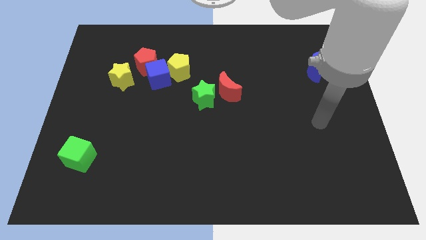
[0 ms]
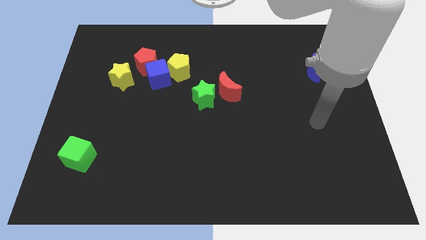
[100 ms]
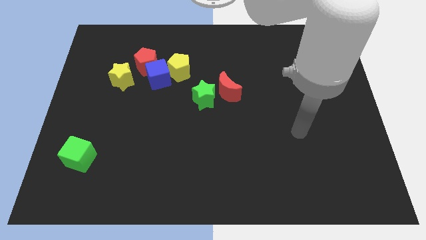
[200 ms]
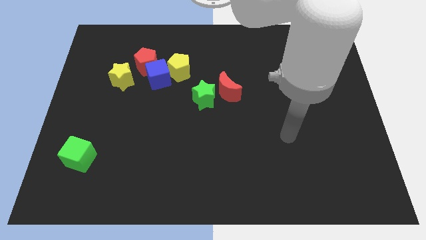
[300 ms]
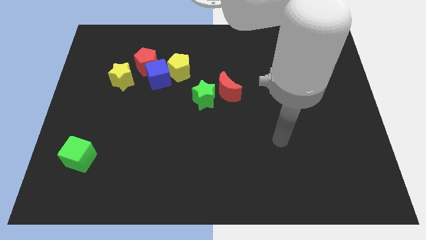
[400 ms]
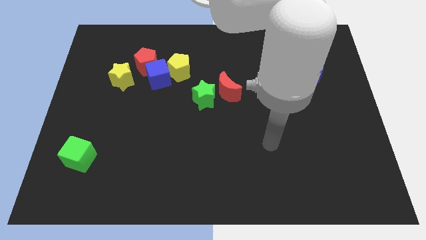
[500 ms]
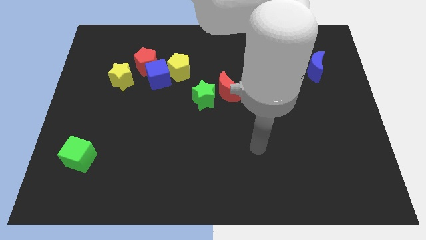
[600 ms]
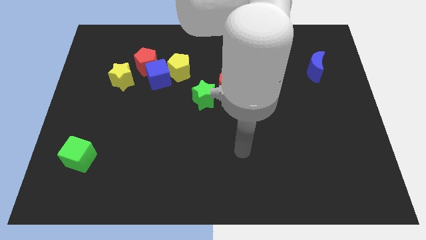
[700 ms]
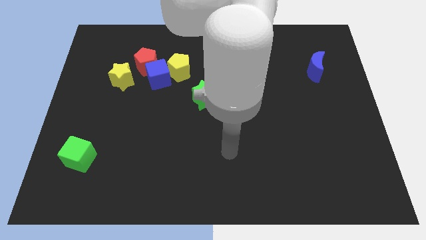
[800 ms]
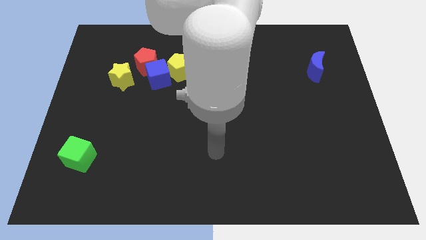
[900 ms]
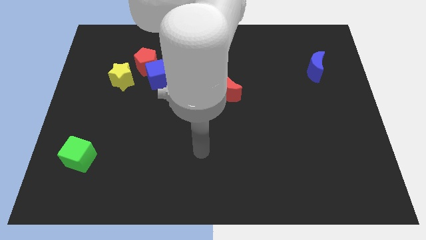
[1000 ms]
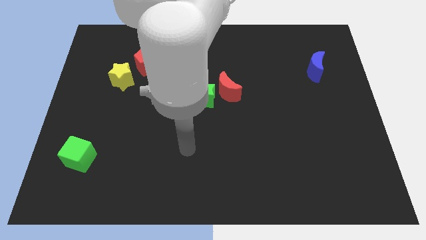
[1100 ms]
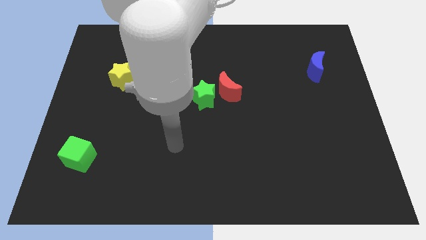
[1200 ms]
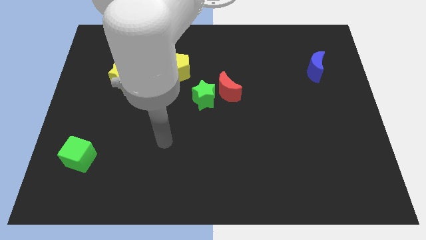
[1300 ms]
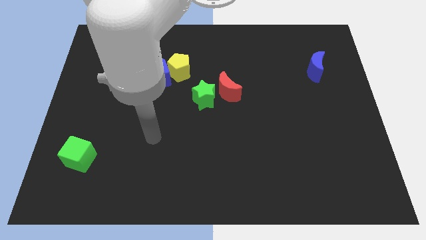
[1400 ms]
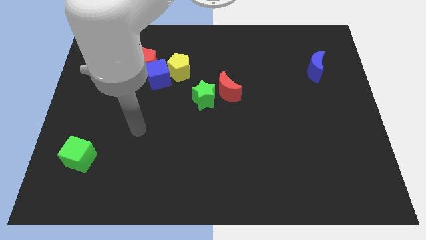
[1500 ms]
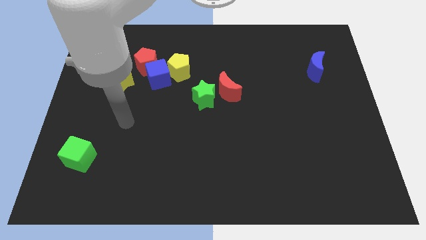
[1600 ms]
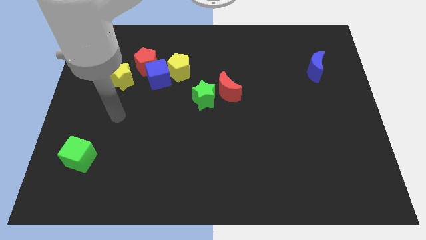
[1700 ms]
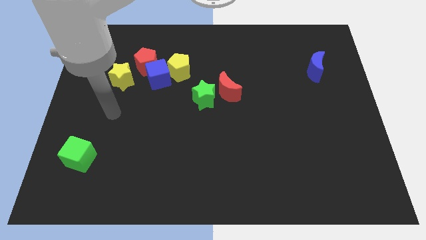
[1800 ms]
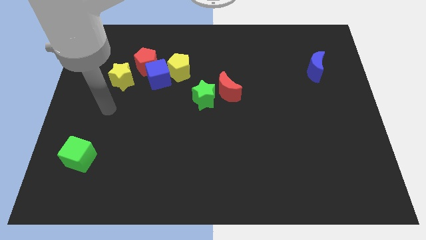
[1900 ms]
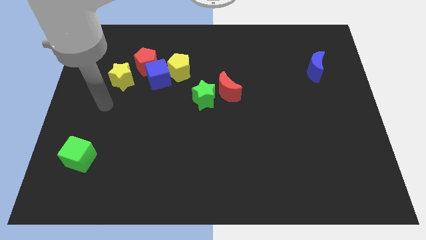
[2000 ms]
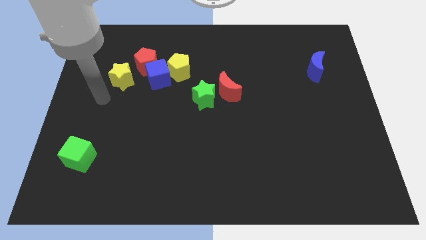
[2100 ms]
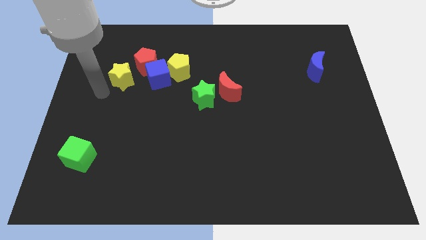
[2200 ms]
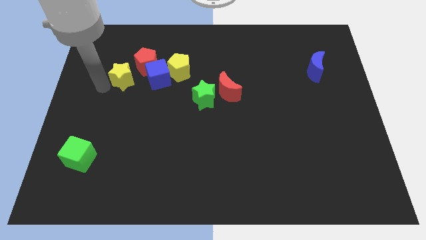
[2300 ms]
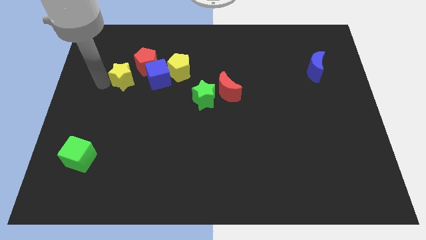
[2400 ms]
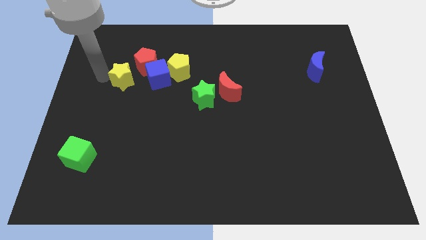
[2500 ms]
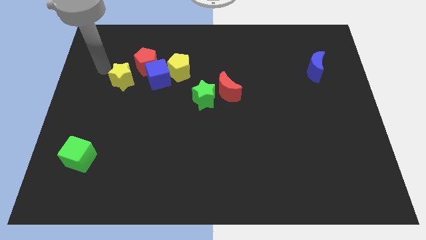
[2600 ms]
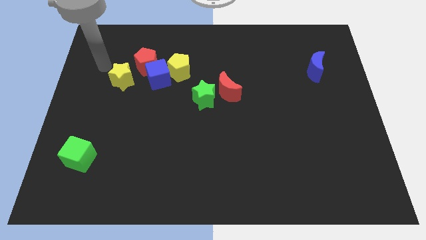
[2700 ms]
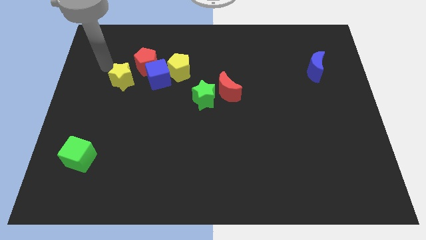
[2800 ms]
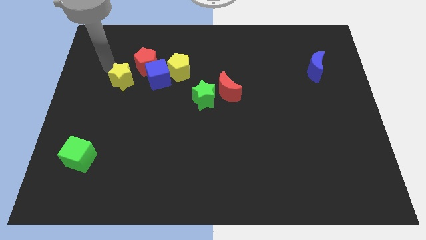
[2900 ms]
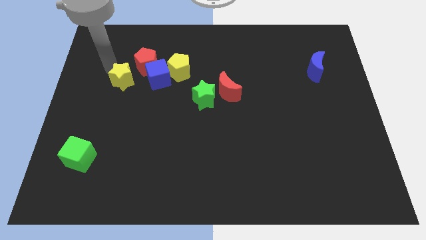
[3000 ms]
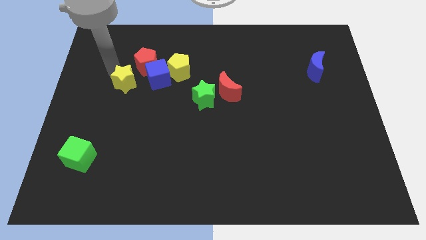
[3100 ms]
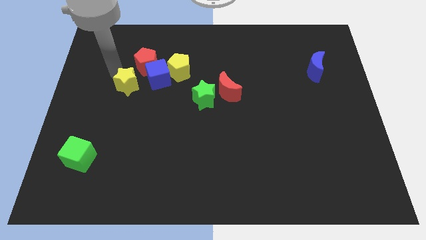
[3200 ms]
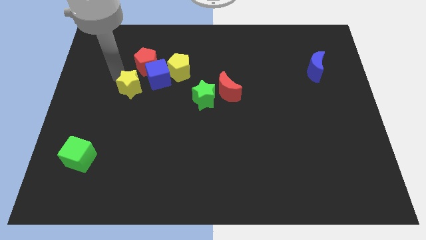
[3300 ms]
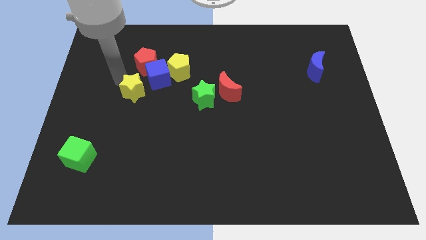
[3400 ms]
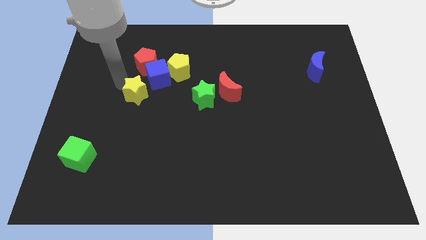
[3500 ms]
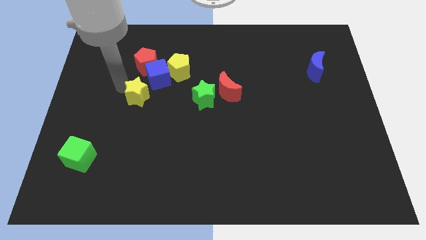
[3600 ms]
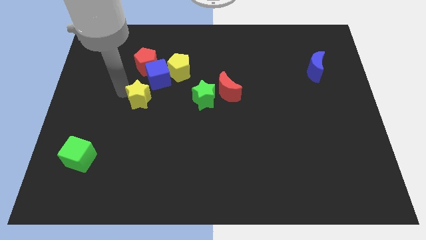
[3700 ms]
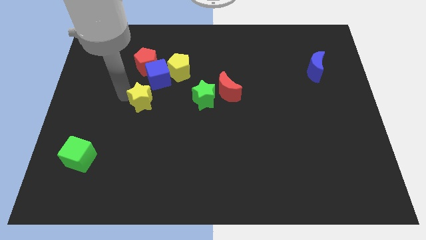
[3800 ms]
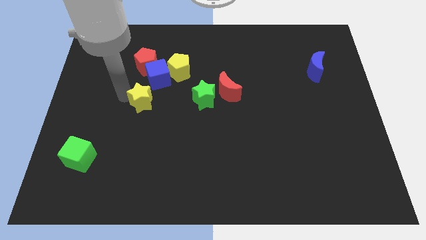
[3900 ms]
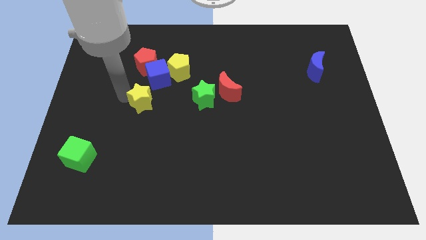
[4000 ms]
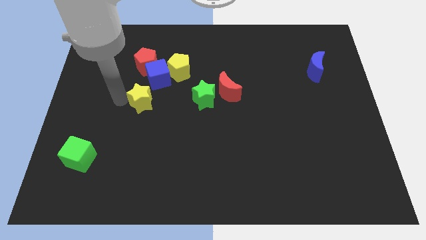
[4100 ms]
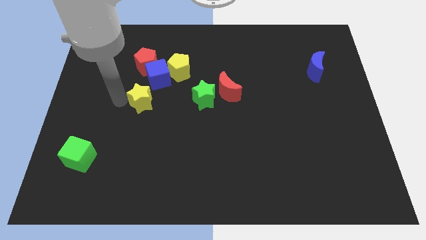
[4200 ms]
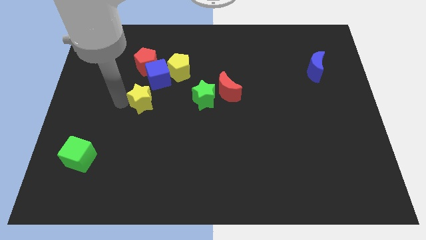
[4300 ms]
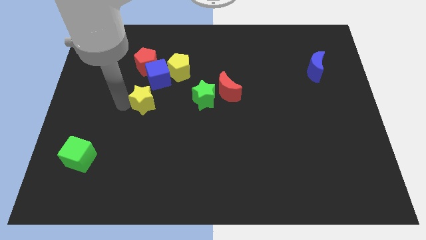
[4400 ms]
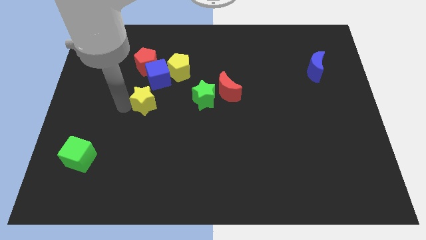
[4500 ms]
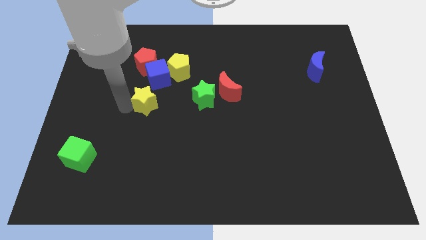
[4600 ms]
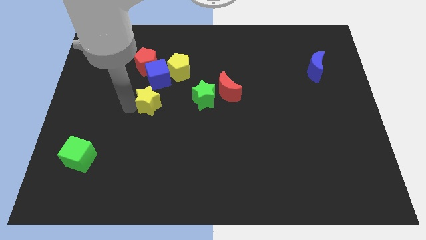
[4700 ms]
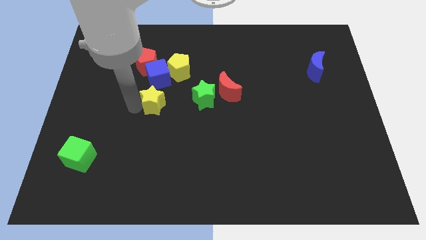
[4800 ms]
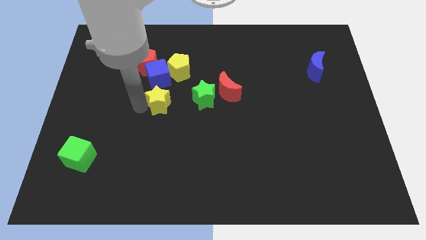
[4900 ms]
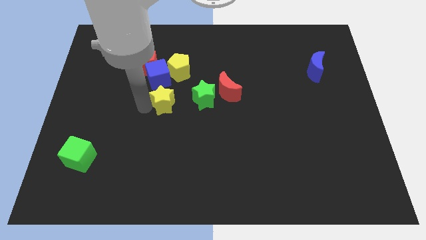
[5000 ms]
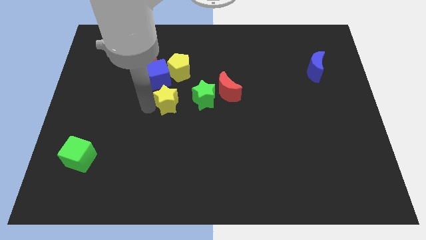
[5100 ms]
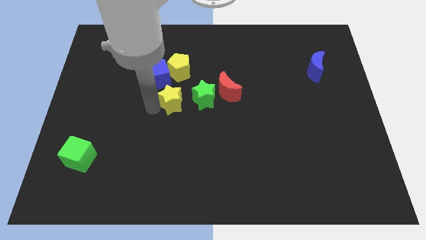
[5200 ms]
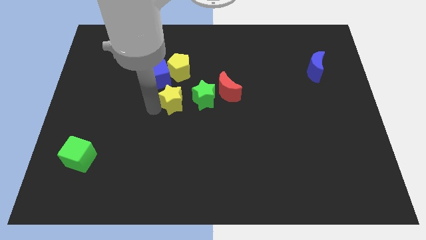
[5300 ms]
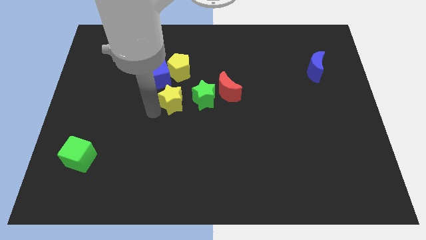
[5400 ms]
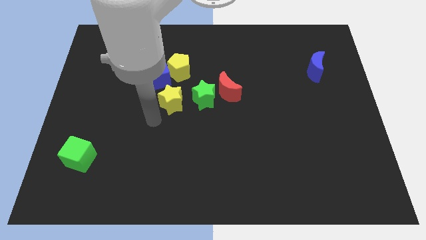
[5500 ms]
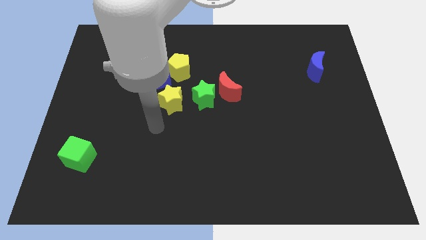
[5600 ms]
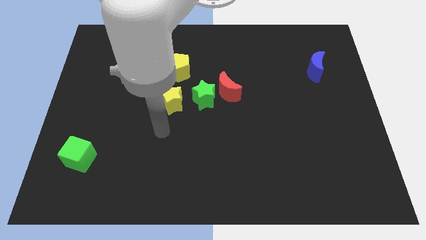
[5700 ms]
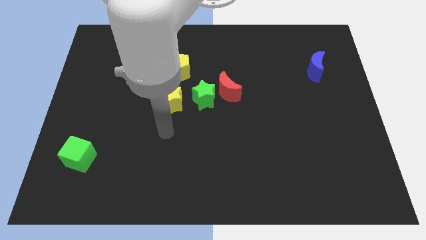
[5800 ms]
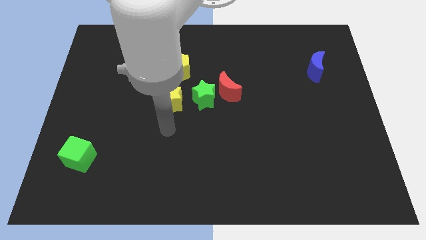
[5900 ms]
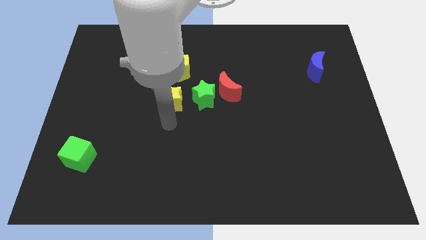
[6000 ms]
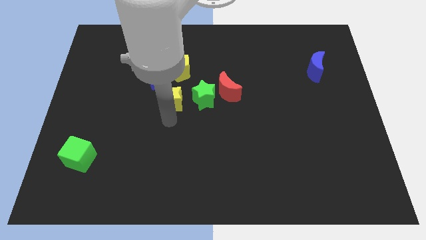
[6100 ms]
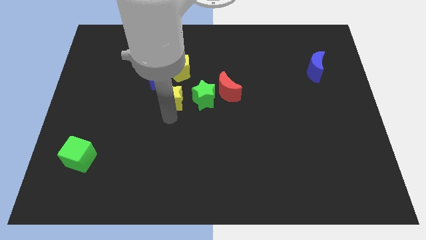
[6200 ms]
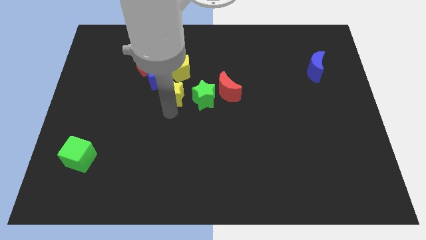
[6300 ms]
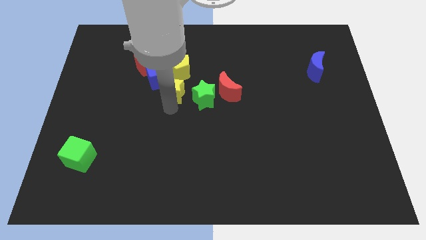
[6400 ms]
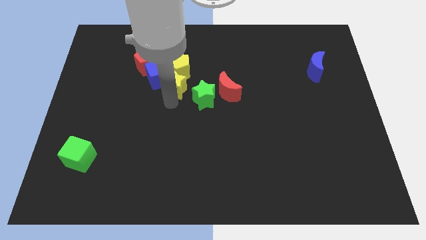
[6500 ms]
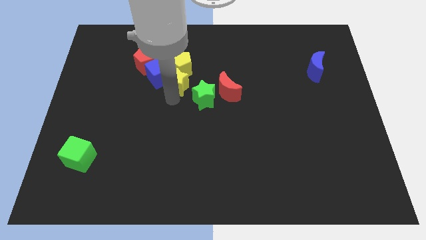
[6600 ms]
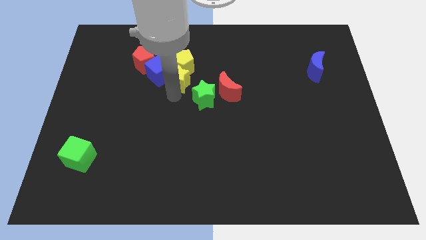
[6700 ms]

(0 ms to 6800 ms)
slide the yellow star close to the yellow pentagon

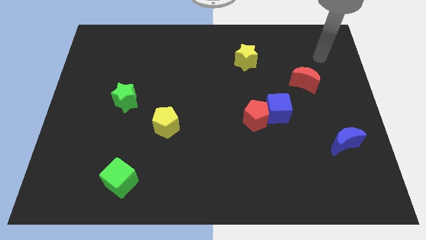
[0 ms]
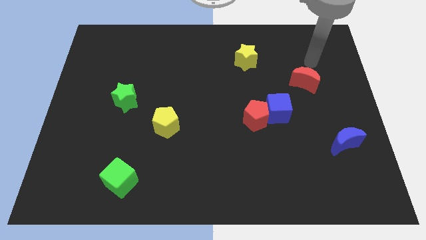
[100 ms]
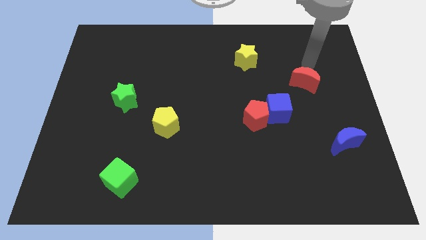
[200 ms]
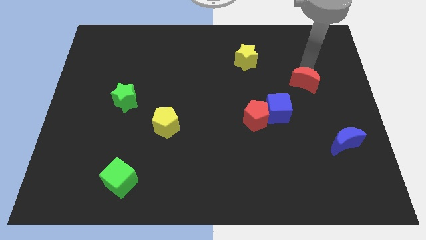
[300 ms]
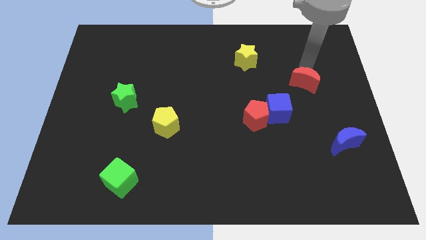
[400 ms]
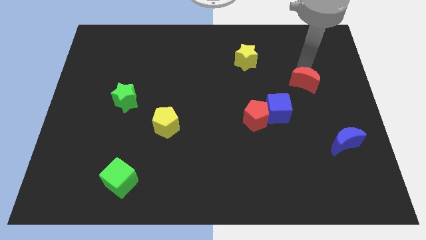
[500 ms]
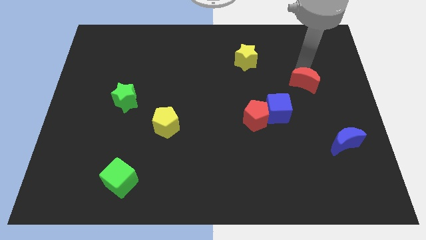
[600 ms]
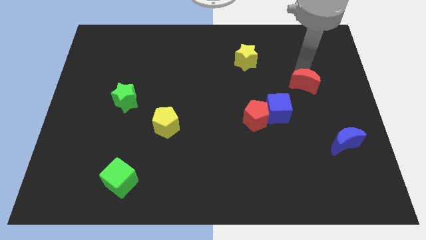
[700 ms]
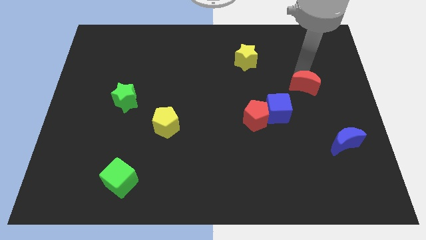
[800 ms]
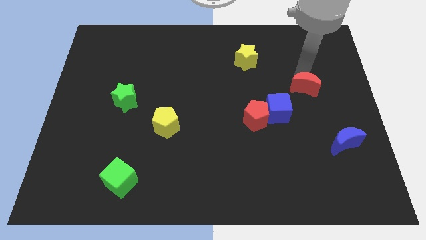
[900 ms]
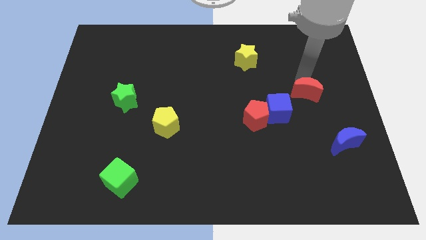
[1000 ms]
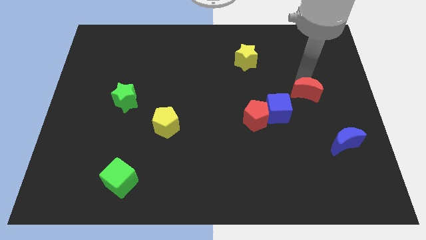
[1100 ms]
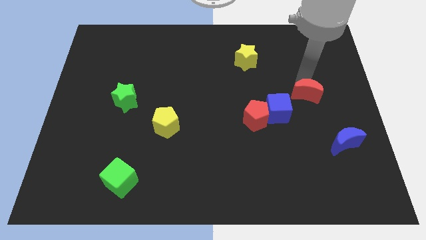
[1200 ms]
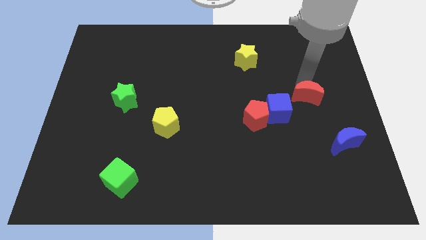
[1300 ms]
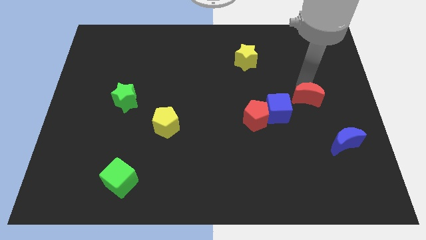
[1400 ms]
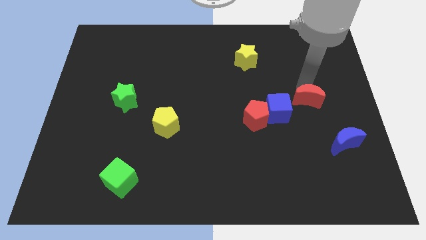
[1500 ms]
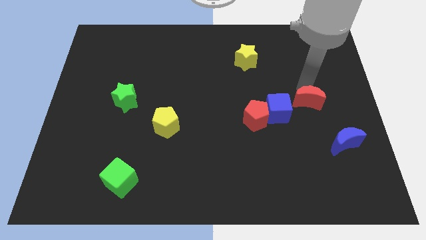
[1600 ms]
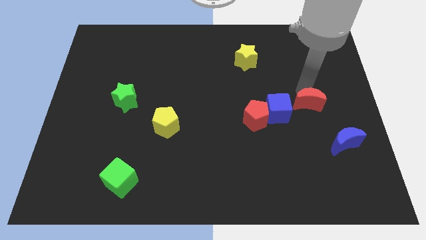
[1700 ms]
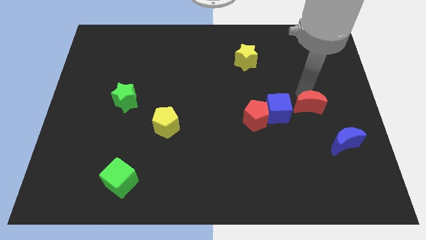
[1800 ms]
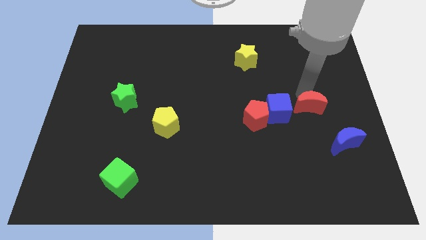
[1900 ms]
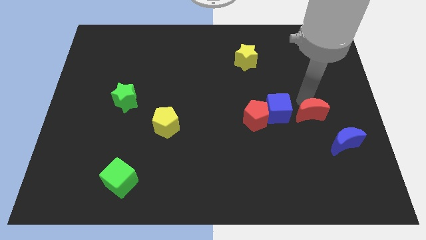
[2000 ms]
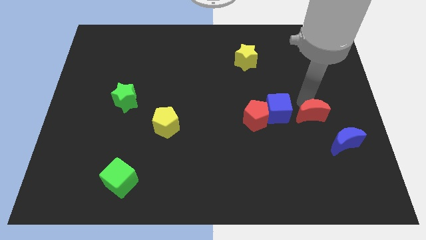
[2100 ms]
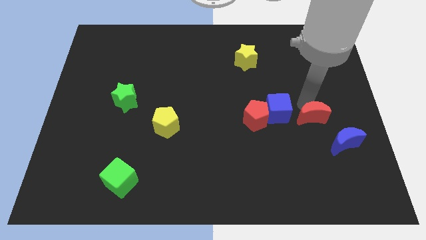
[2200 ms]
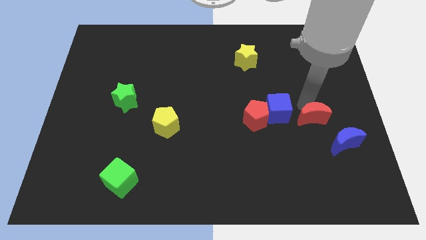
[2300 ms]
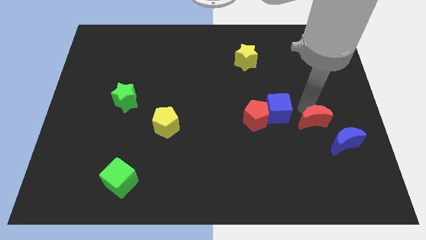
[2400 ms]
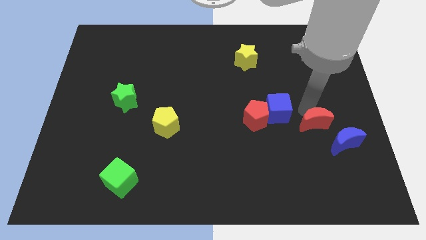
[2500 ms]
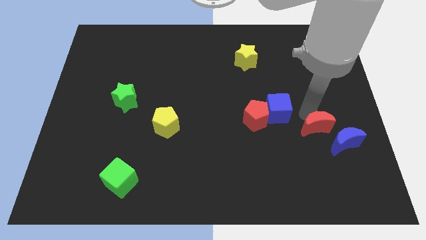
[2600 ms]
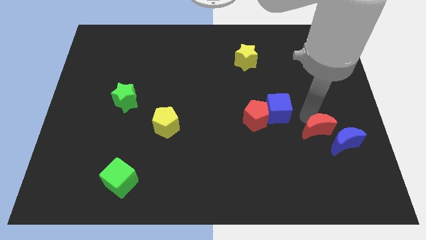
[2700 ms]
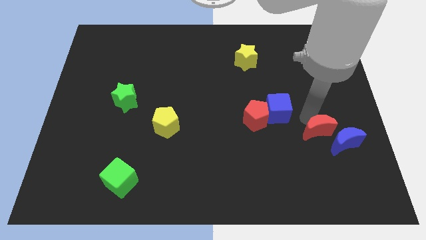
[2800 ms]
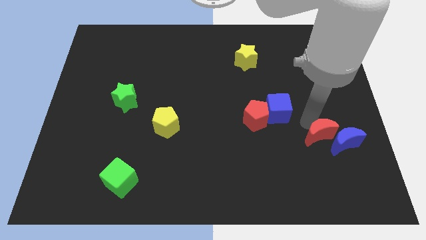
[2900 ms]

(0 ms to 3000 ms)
move the red moon close to the blue moon
